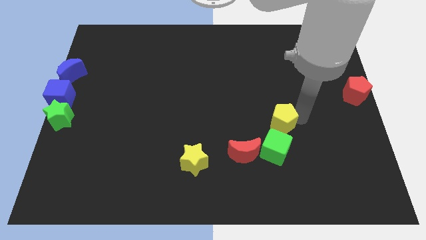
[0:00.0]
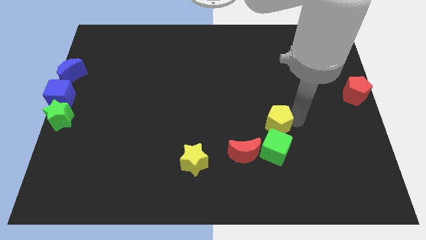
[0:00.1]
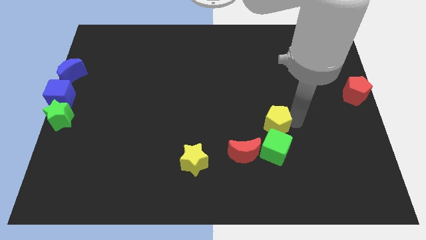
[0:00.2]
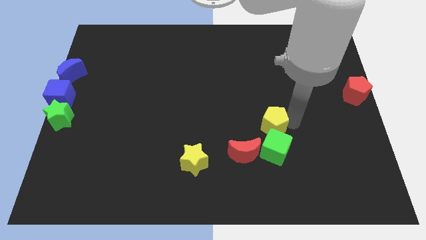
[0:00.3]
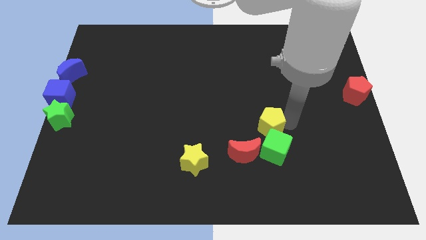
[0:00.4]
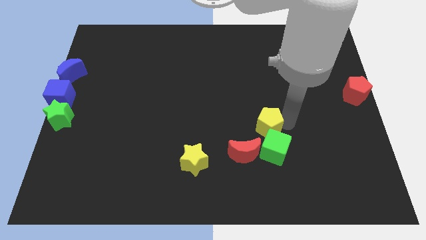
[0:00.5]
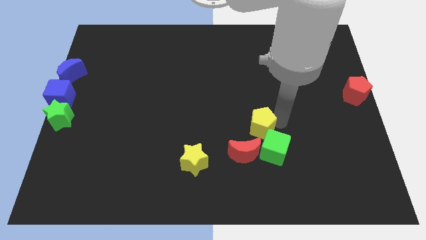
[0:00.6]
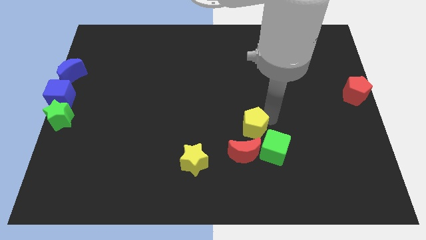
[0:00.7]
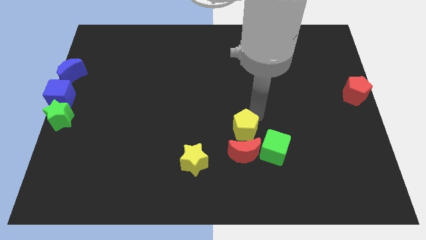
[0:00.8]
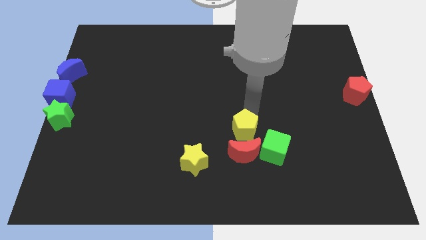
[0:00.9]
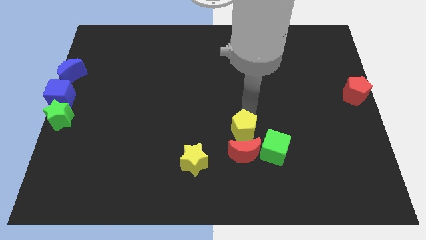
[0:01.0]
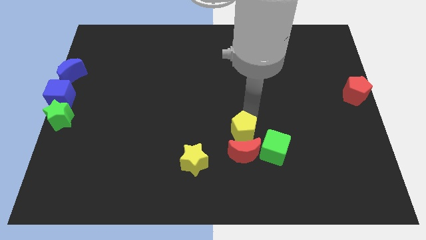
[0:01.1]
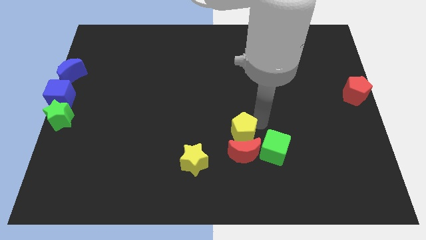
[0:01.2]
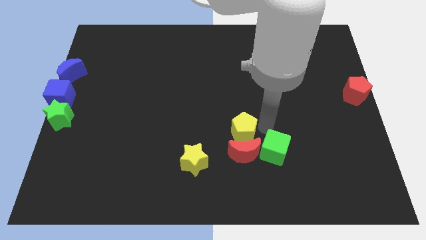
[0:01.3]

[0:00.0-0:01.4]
move the yellow pentagon to the top of the red crescent

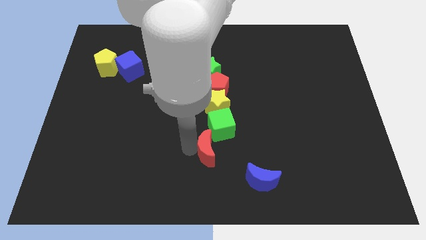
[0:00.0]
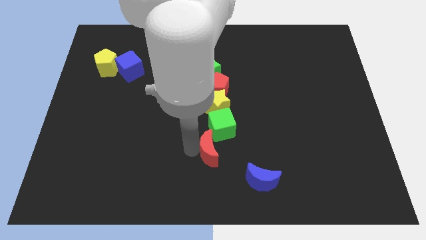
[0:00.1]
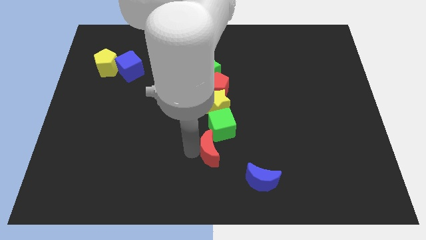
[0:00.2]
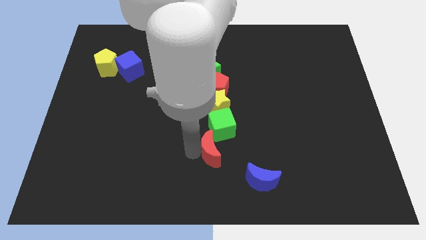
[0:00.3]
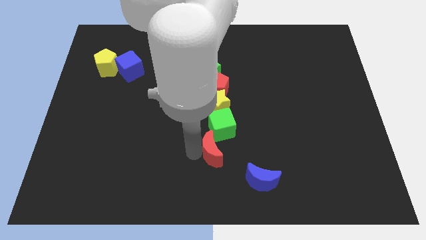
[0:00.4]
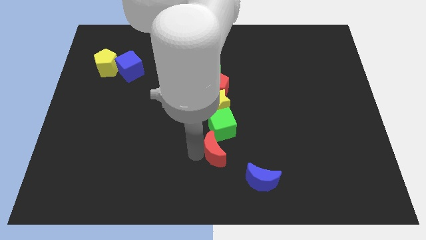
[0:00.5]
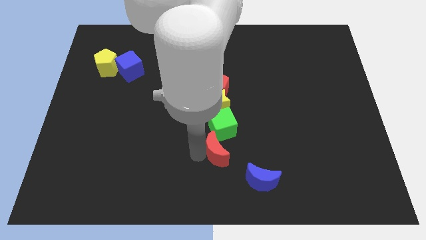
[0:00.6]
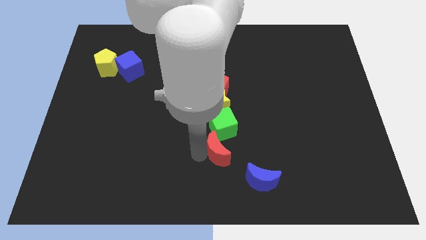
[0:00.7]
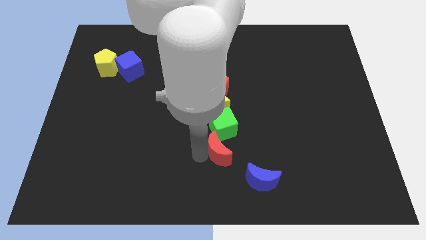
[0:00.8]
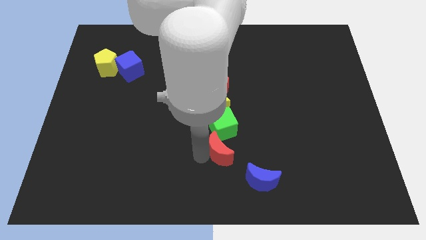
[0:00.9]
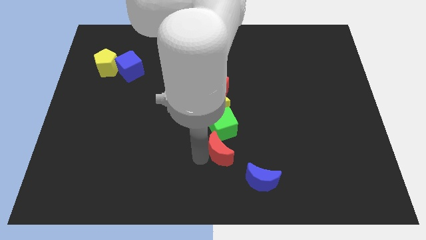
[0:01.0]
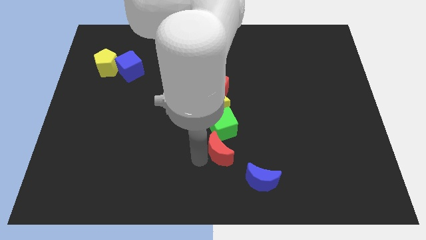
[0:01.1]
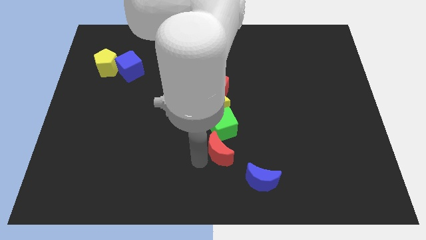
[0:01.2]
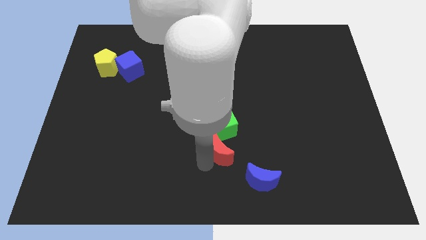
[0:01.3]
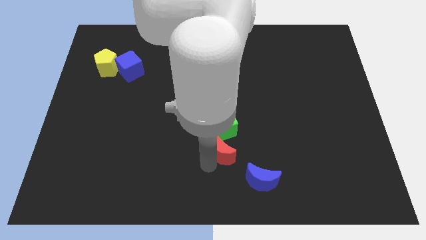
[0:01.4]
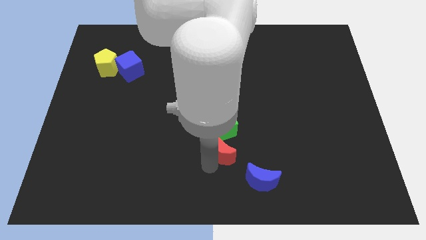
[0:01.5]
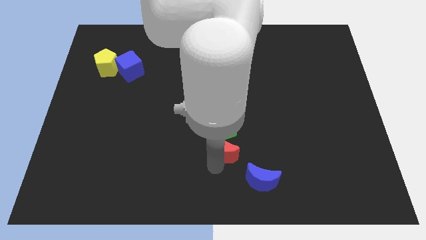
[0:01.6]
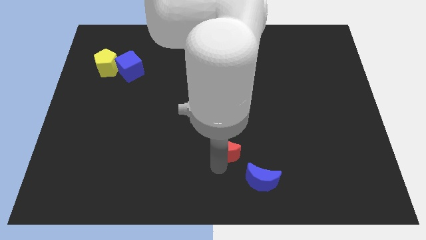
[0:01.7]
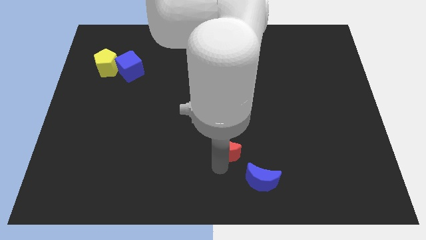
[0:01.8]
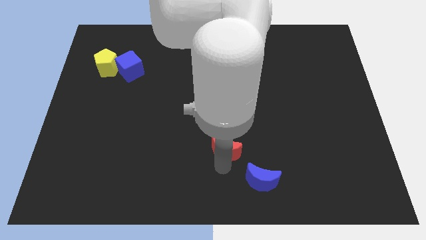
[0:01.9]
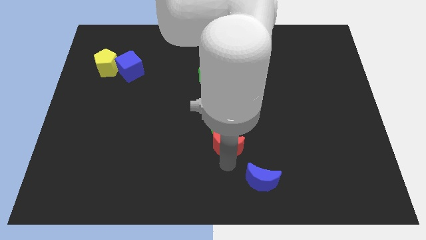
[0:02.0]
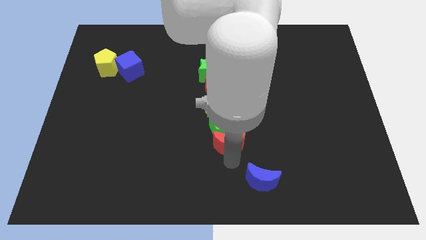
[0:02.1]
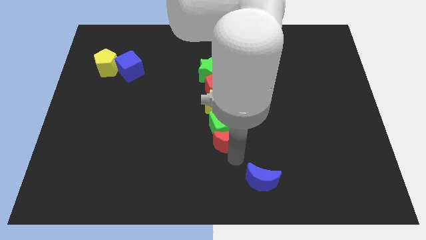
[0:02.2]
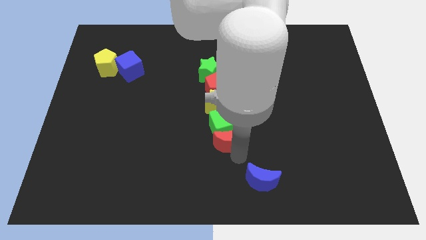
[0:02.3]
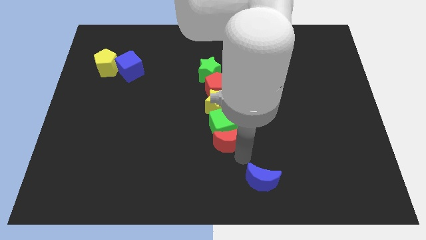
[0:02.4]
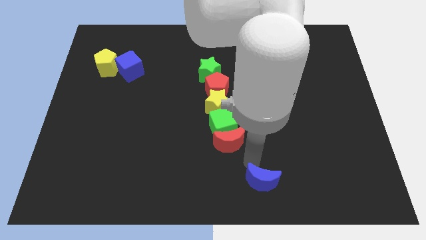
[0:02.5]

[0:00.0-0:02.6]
push the red moon below into the green cube

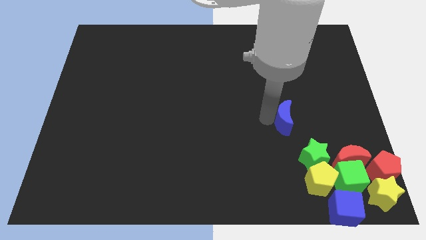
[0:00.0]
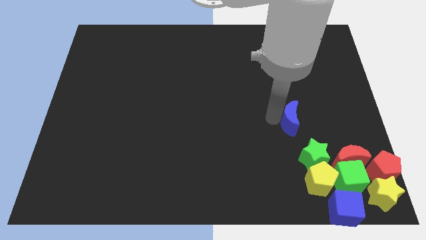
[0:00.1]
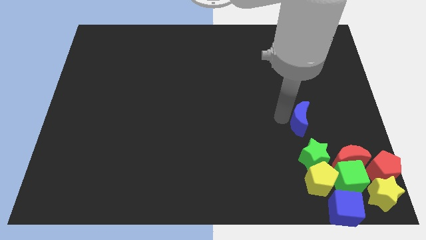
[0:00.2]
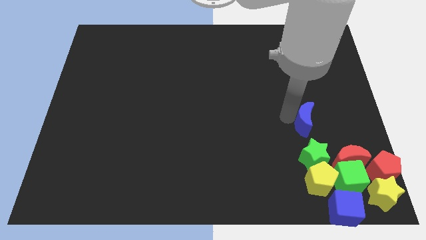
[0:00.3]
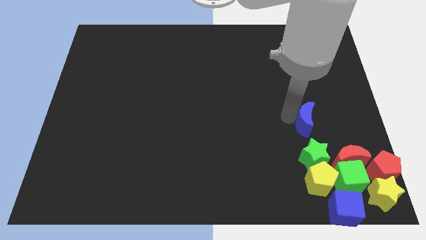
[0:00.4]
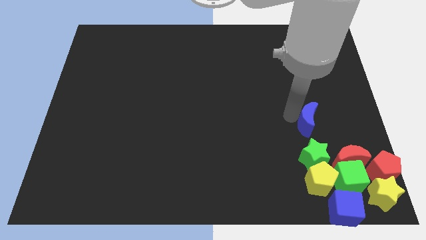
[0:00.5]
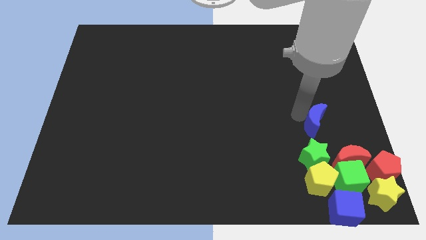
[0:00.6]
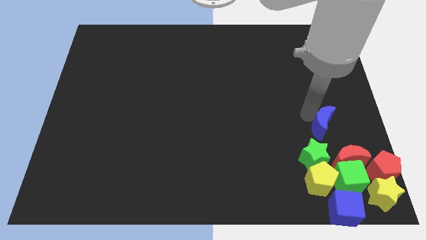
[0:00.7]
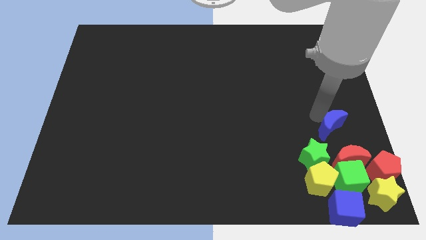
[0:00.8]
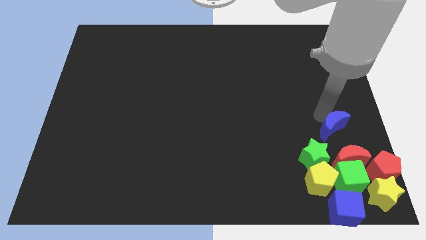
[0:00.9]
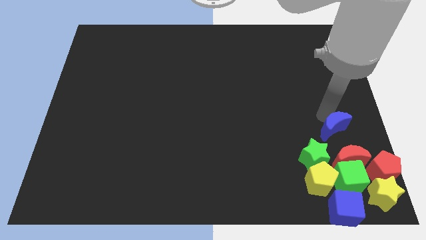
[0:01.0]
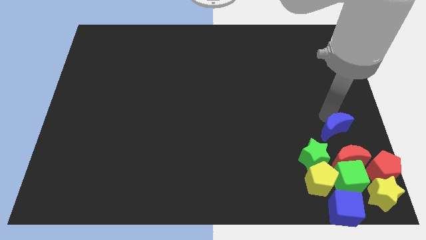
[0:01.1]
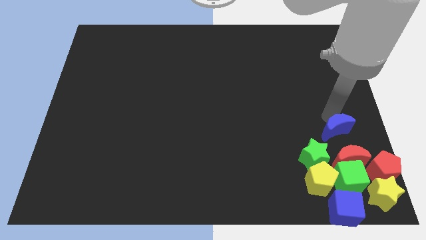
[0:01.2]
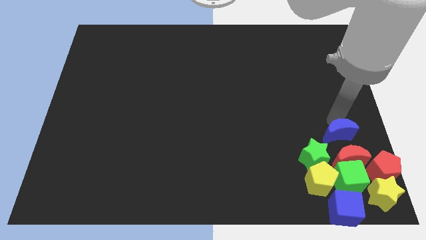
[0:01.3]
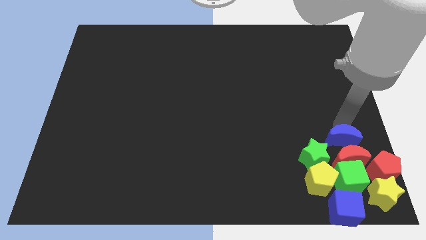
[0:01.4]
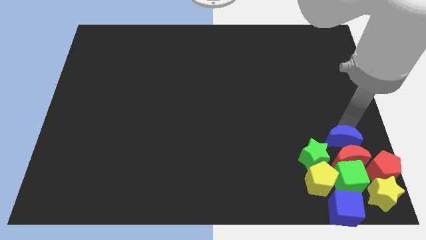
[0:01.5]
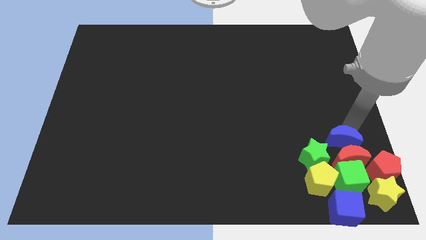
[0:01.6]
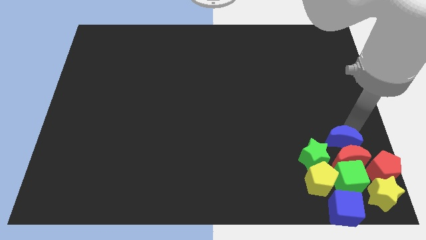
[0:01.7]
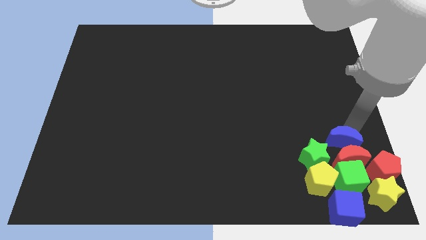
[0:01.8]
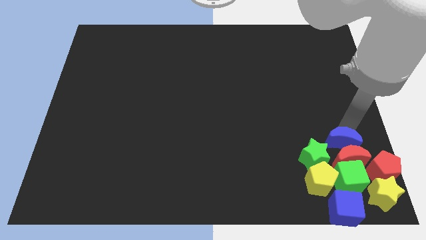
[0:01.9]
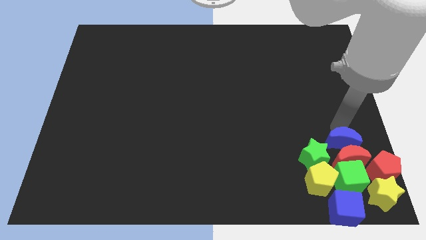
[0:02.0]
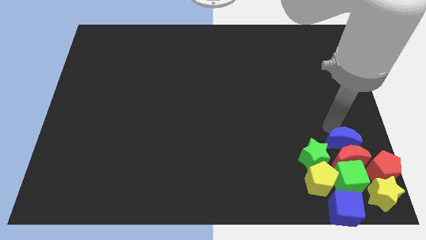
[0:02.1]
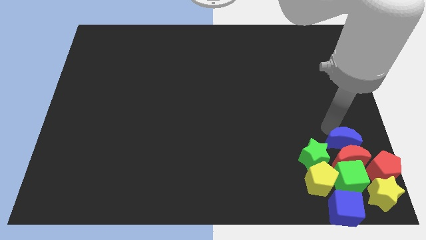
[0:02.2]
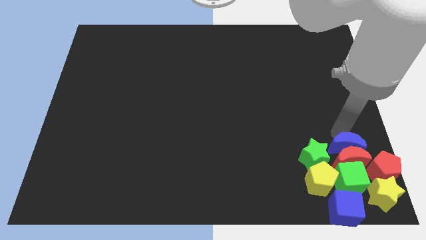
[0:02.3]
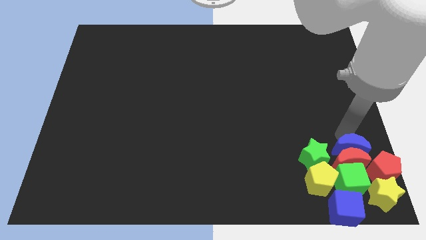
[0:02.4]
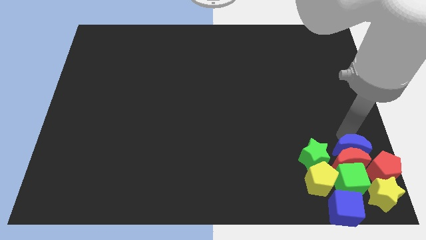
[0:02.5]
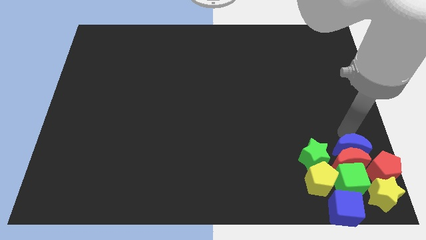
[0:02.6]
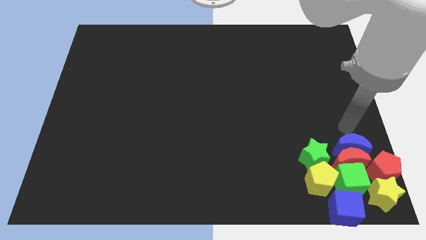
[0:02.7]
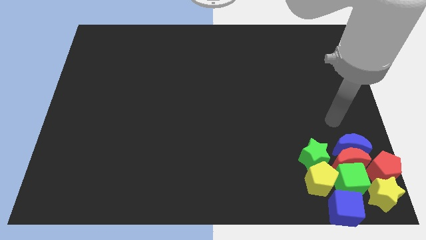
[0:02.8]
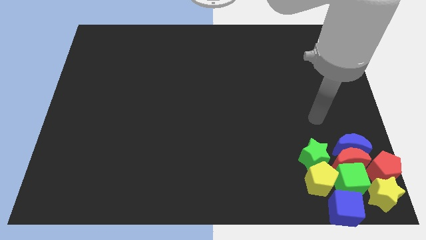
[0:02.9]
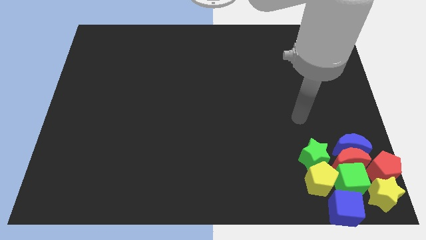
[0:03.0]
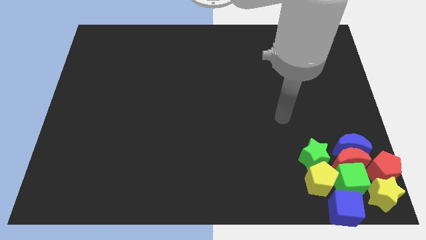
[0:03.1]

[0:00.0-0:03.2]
move the blue crescent into the red crescent

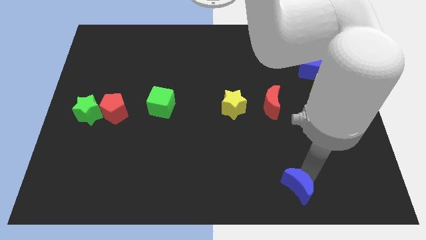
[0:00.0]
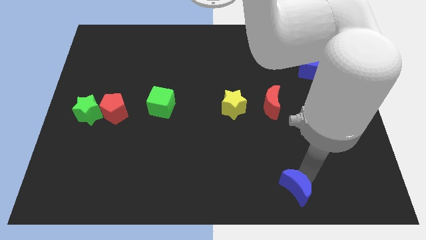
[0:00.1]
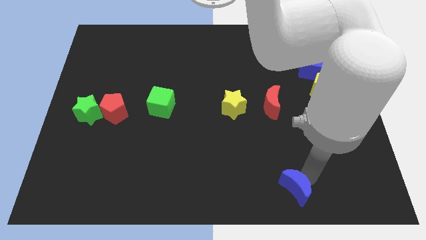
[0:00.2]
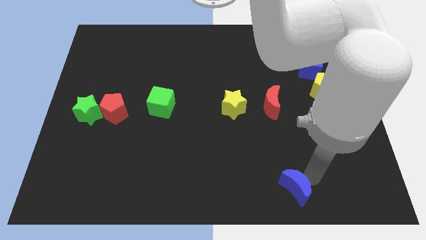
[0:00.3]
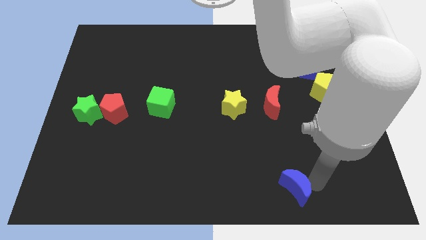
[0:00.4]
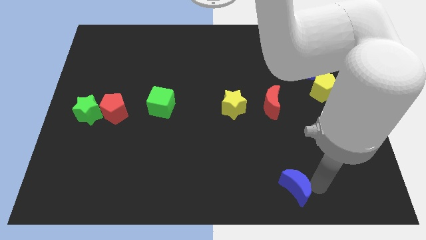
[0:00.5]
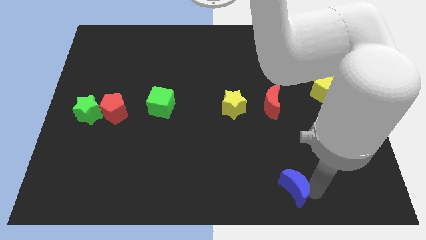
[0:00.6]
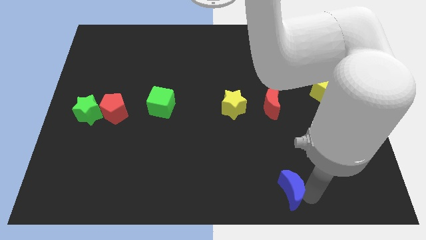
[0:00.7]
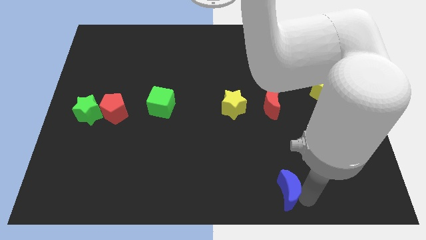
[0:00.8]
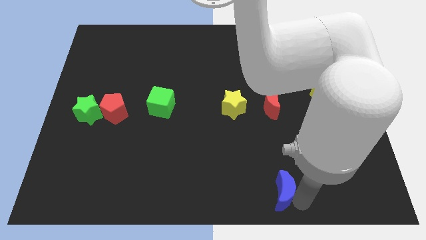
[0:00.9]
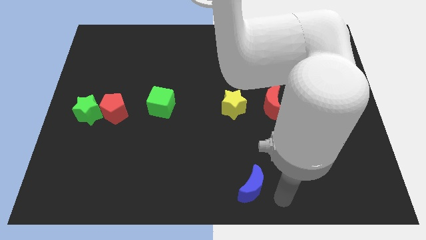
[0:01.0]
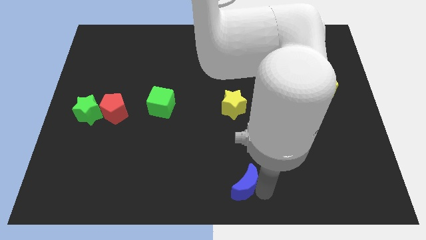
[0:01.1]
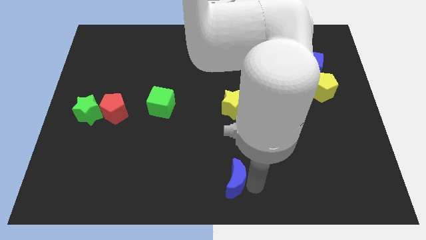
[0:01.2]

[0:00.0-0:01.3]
place the blue moon vertically beloew the yellow star

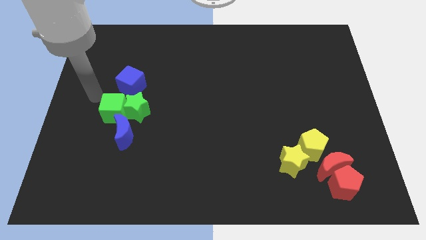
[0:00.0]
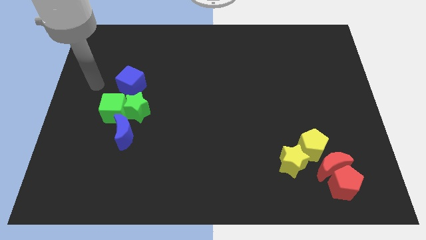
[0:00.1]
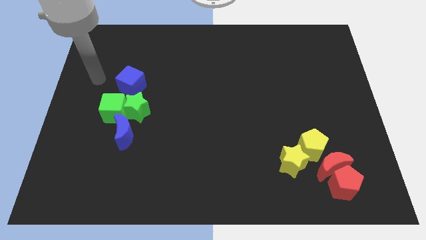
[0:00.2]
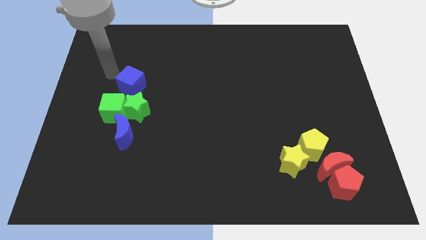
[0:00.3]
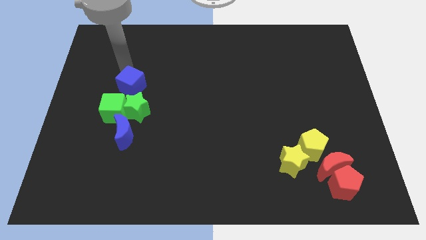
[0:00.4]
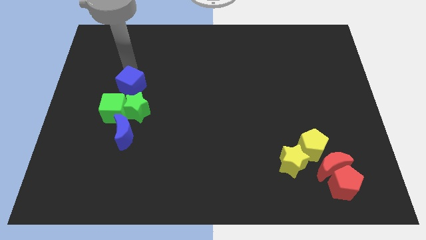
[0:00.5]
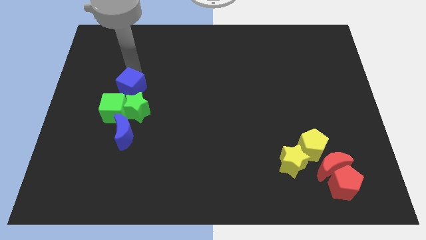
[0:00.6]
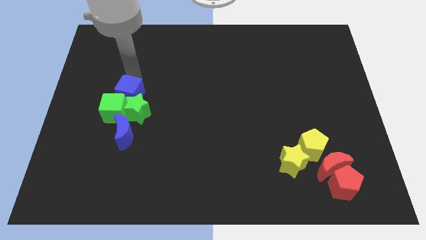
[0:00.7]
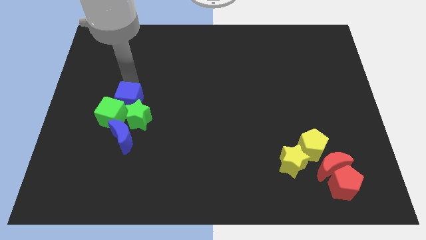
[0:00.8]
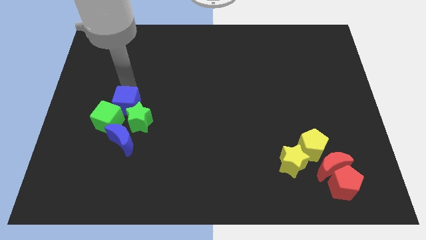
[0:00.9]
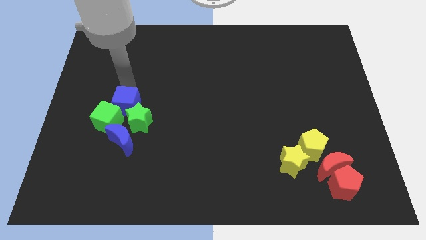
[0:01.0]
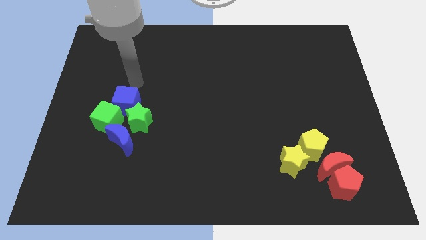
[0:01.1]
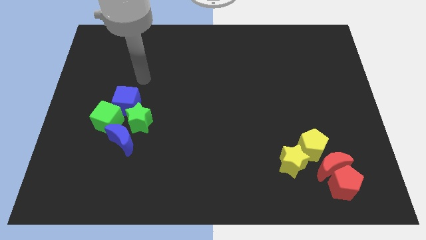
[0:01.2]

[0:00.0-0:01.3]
move the blue cube into the green cube
